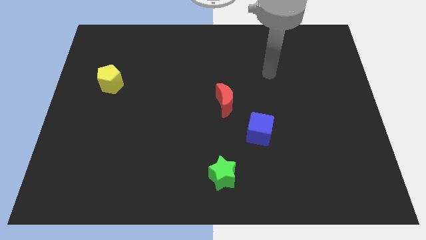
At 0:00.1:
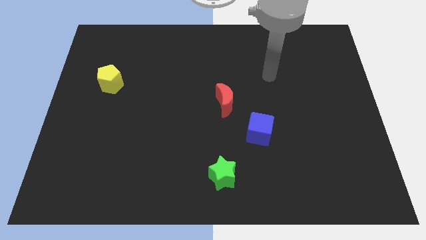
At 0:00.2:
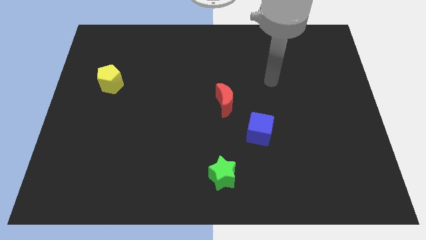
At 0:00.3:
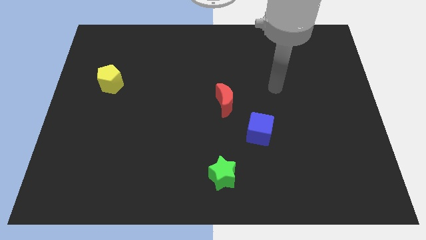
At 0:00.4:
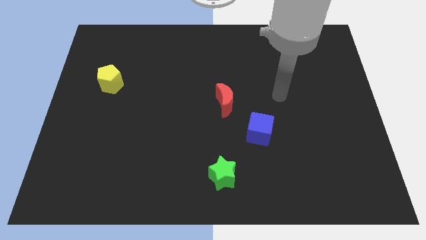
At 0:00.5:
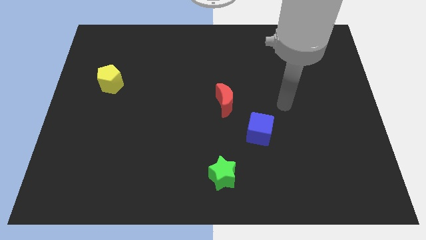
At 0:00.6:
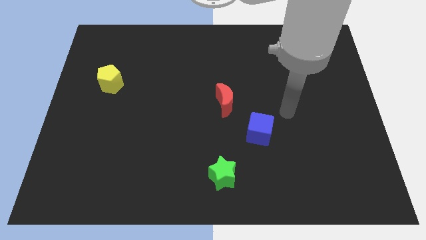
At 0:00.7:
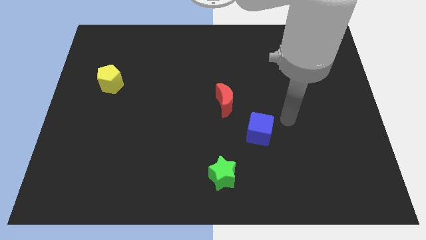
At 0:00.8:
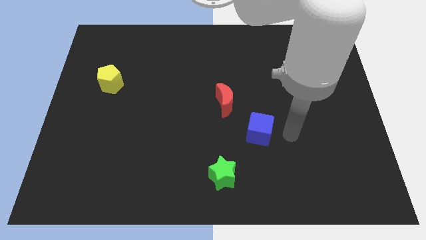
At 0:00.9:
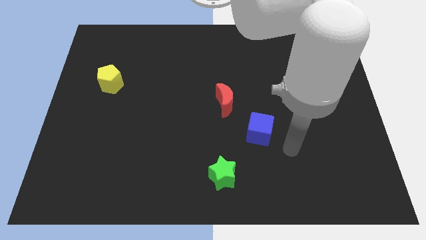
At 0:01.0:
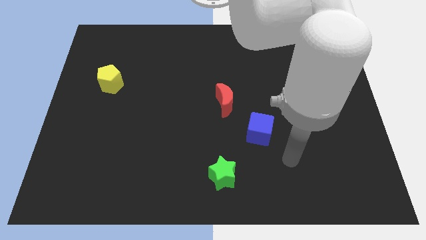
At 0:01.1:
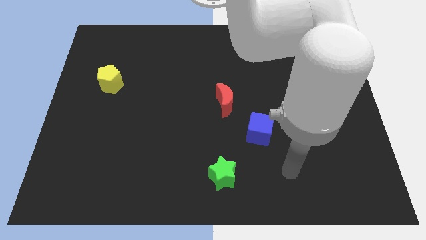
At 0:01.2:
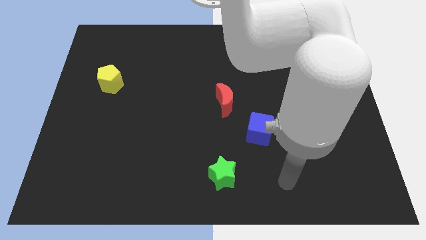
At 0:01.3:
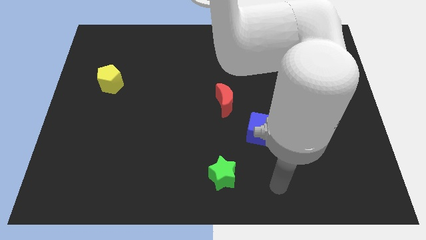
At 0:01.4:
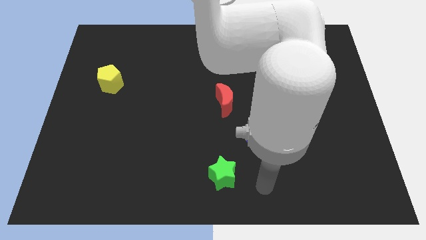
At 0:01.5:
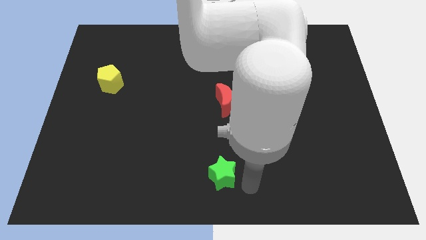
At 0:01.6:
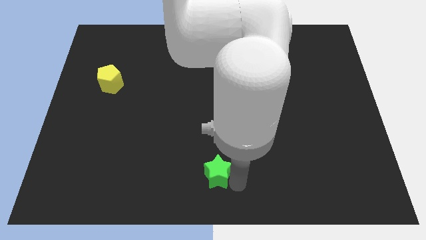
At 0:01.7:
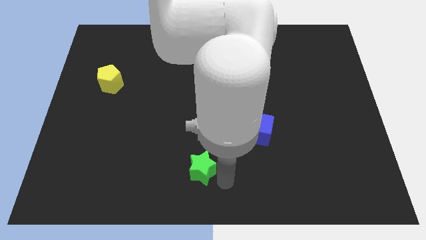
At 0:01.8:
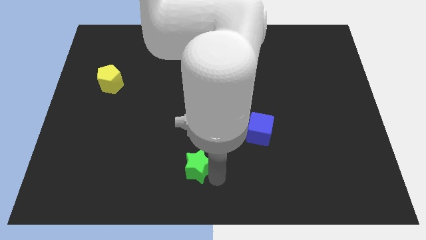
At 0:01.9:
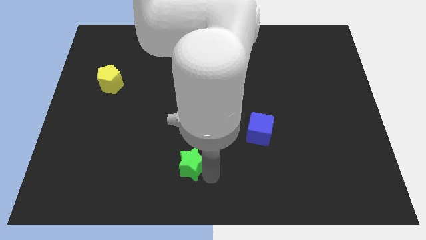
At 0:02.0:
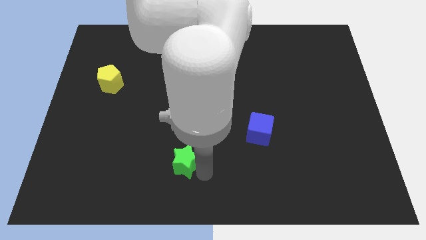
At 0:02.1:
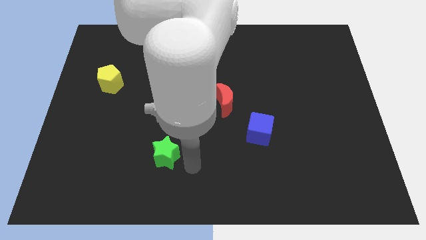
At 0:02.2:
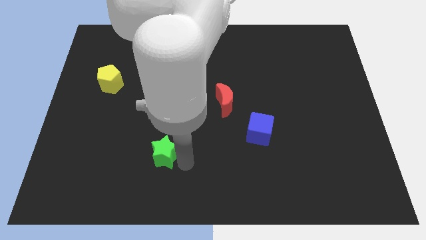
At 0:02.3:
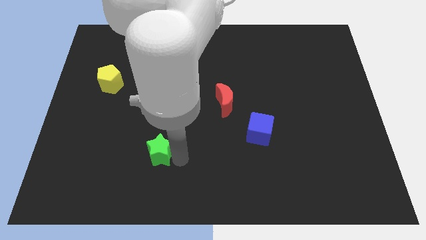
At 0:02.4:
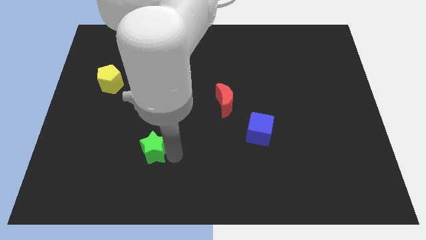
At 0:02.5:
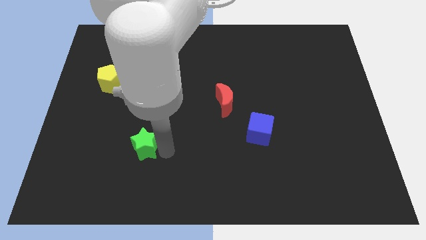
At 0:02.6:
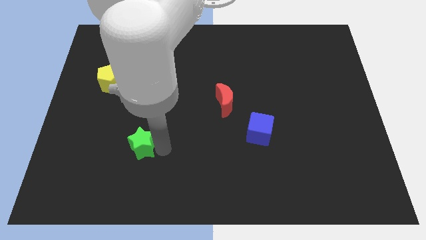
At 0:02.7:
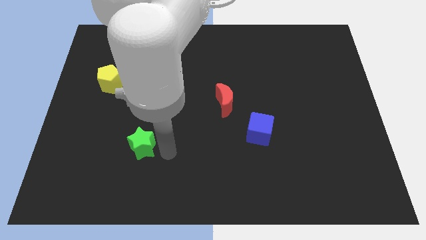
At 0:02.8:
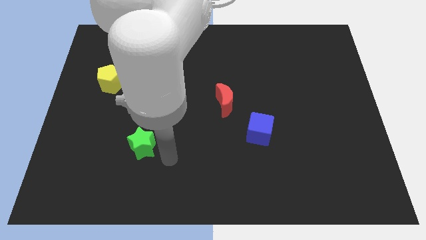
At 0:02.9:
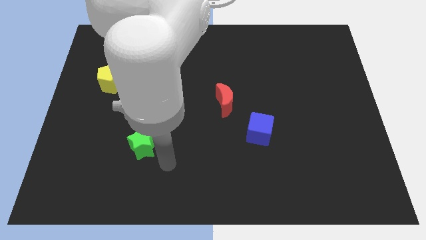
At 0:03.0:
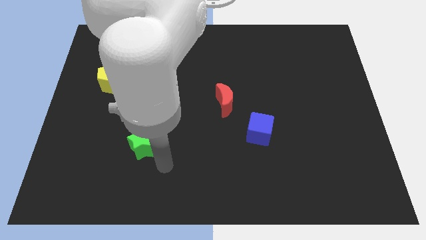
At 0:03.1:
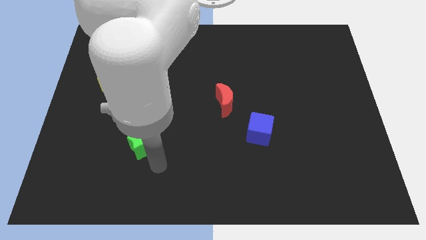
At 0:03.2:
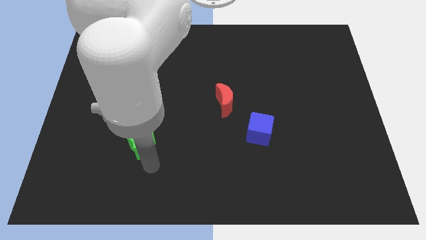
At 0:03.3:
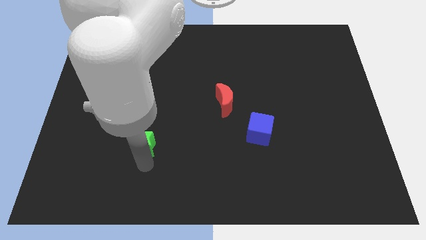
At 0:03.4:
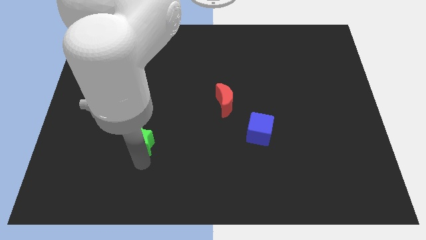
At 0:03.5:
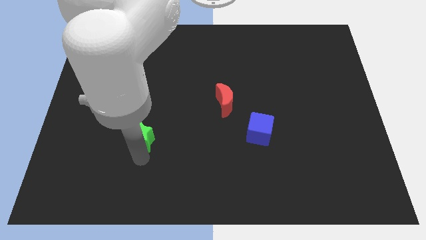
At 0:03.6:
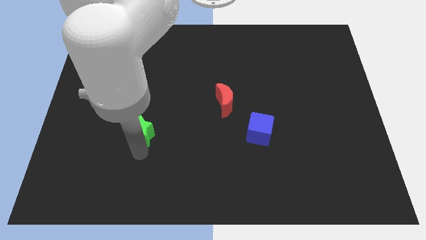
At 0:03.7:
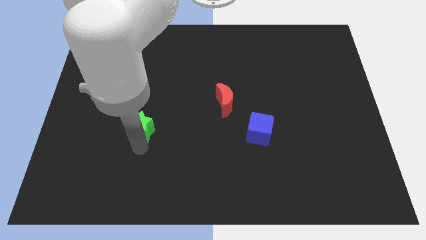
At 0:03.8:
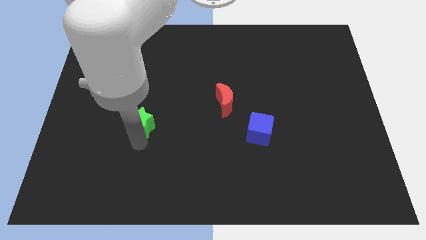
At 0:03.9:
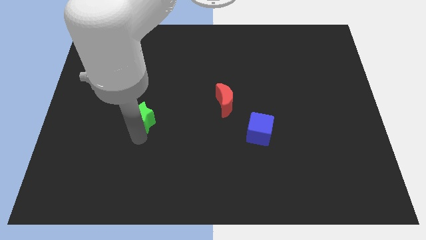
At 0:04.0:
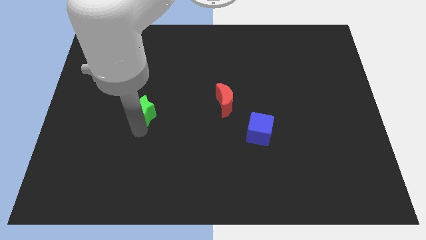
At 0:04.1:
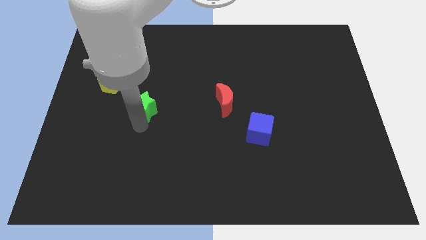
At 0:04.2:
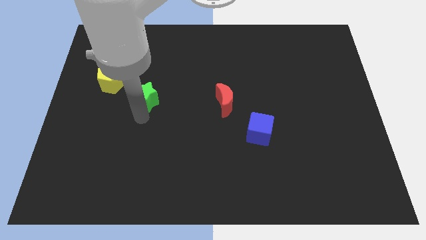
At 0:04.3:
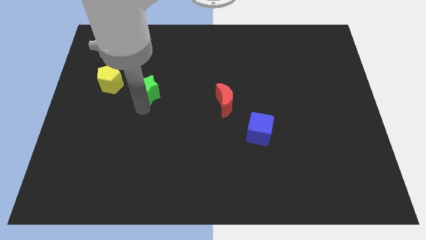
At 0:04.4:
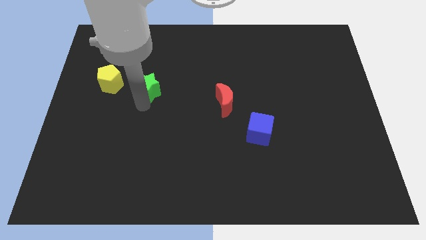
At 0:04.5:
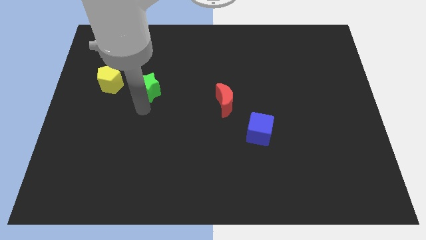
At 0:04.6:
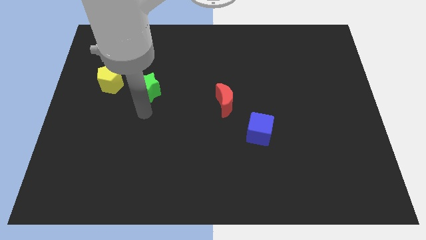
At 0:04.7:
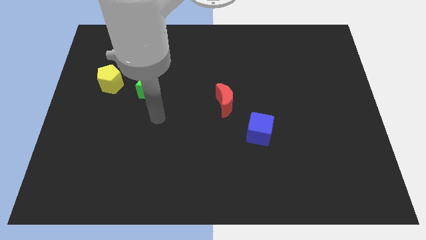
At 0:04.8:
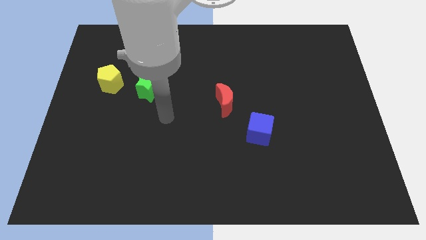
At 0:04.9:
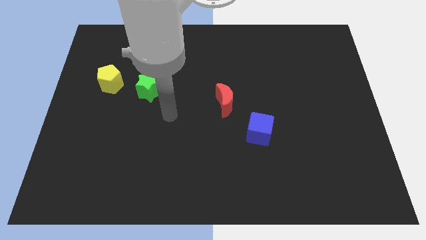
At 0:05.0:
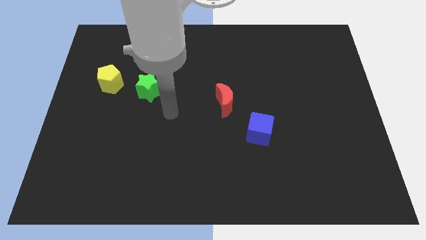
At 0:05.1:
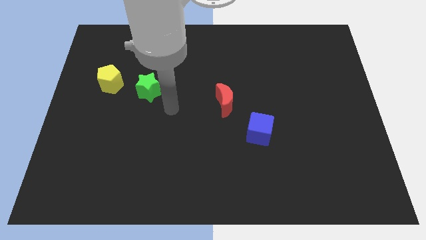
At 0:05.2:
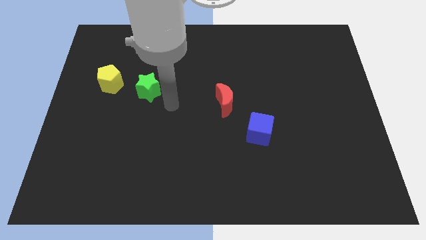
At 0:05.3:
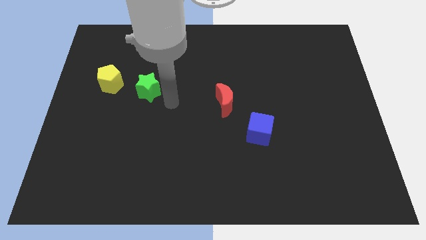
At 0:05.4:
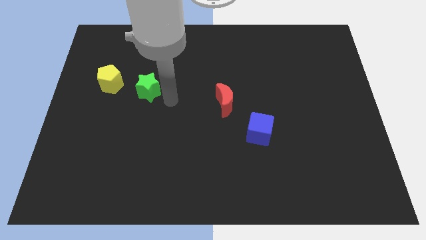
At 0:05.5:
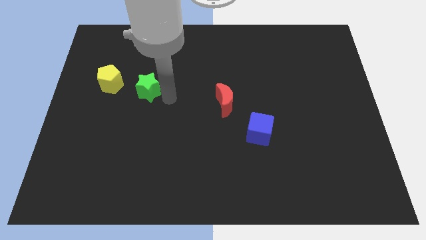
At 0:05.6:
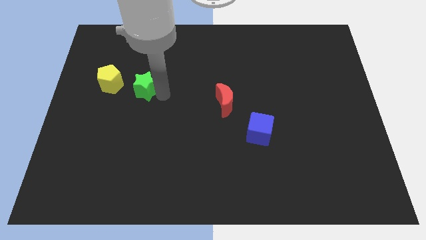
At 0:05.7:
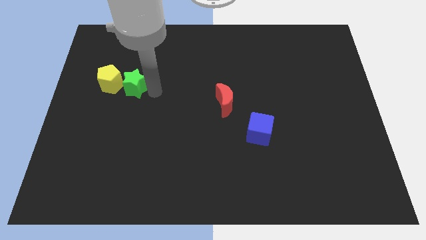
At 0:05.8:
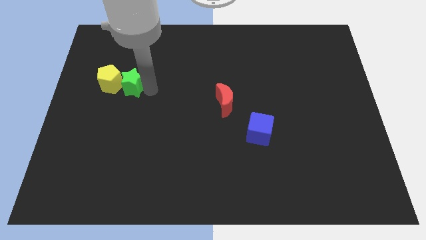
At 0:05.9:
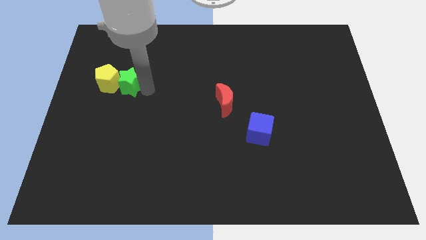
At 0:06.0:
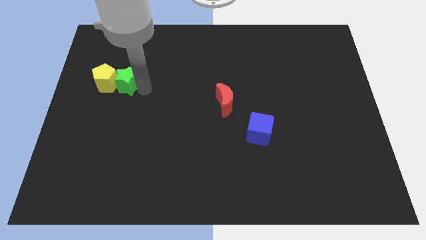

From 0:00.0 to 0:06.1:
push the green star next to the pentagon

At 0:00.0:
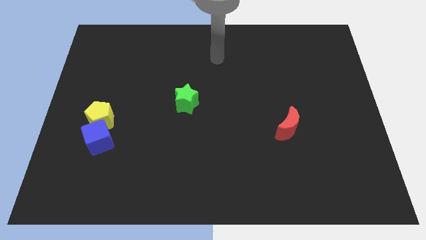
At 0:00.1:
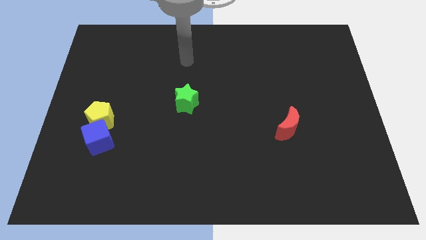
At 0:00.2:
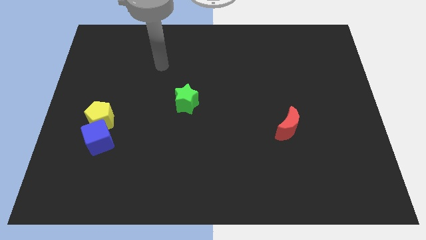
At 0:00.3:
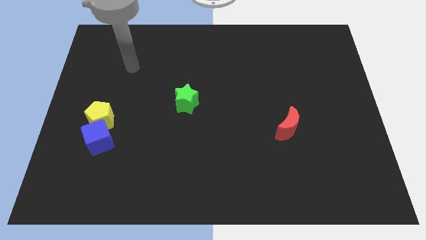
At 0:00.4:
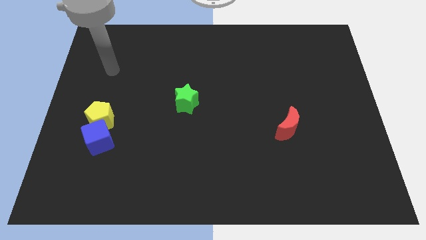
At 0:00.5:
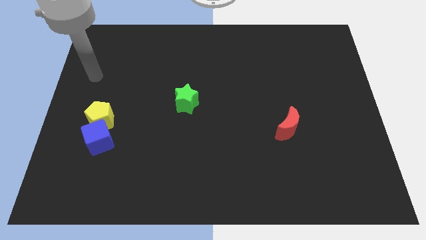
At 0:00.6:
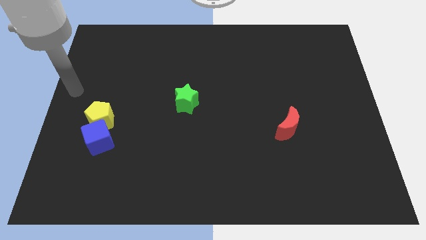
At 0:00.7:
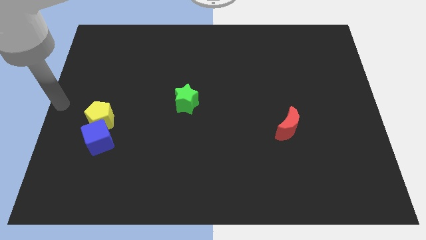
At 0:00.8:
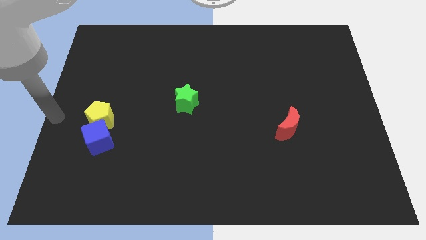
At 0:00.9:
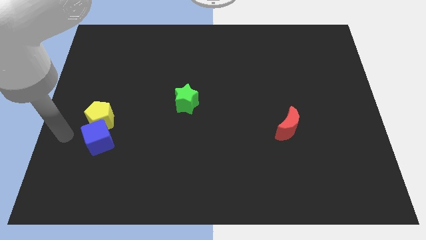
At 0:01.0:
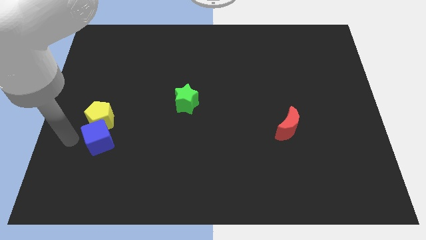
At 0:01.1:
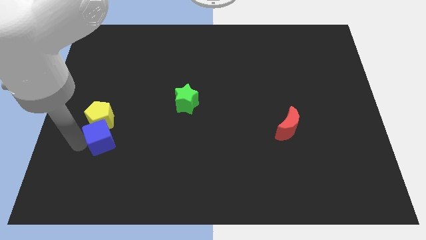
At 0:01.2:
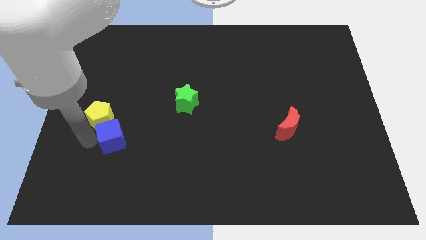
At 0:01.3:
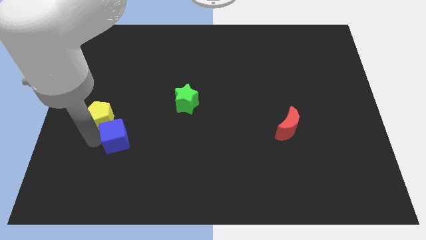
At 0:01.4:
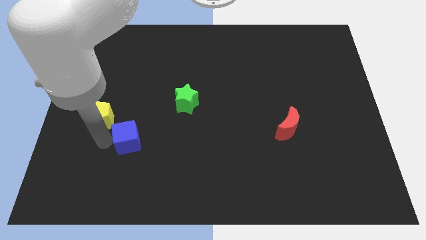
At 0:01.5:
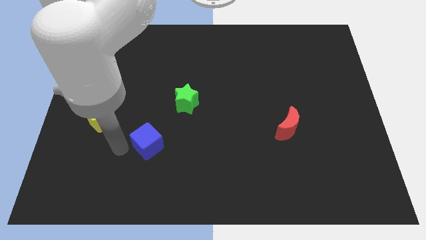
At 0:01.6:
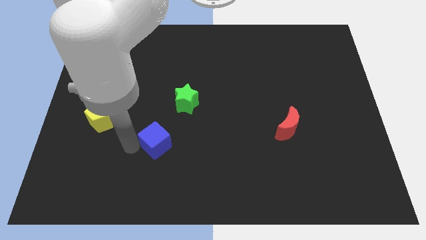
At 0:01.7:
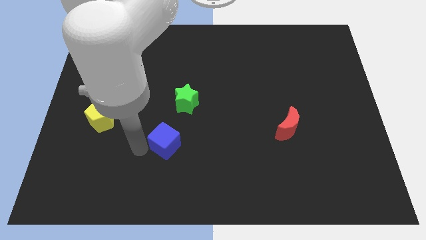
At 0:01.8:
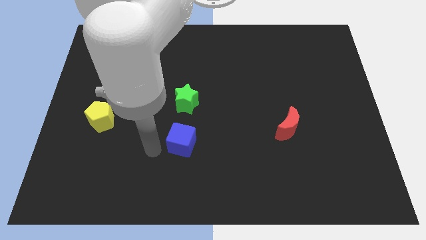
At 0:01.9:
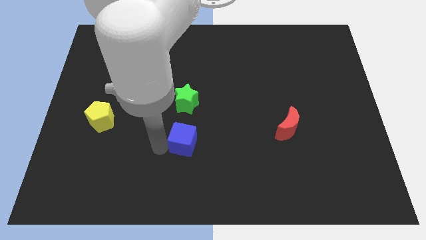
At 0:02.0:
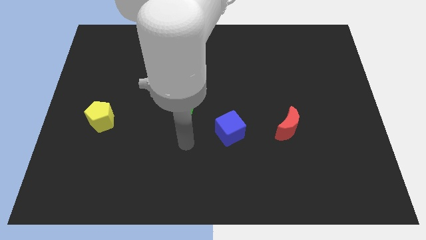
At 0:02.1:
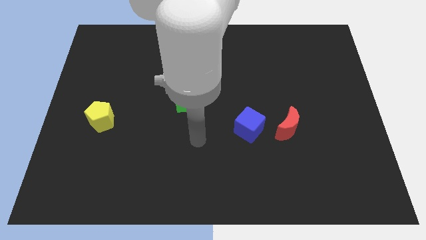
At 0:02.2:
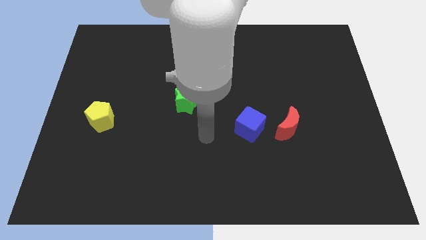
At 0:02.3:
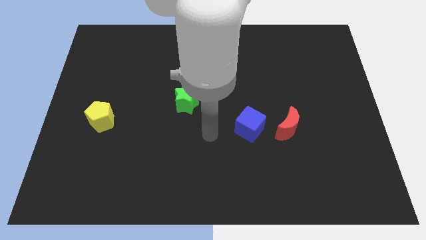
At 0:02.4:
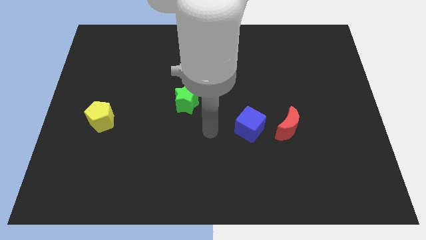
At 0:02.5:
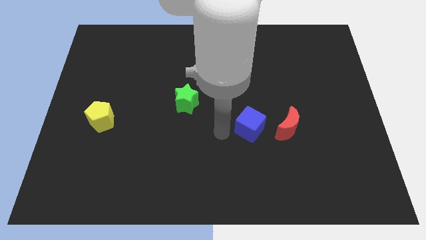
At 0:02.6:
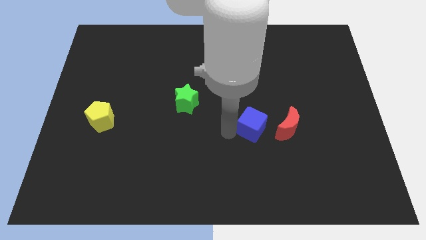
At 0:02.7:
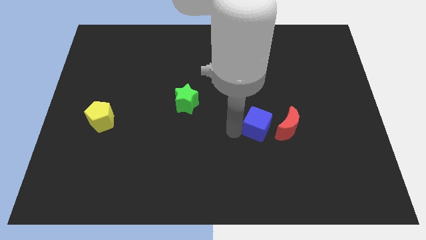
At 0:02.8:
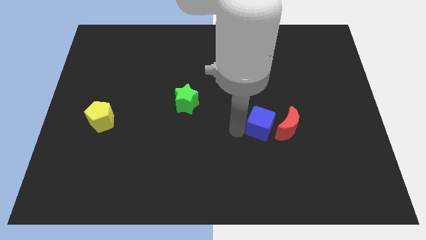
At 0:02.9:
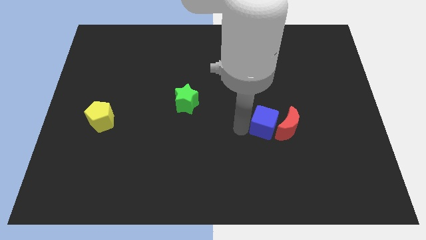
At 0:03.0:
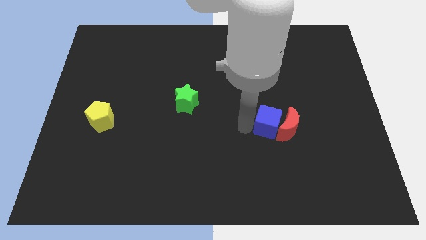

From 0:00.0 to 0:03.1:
slide the blue cube towards the moon
